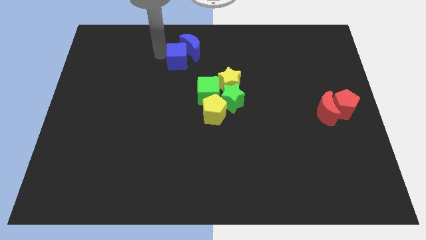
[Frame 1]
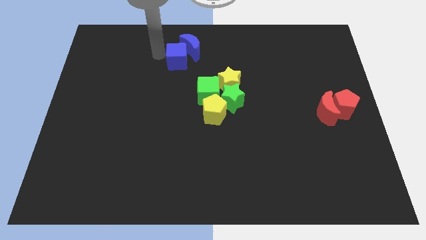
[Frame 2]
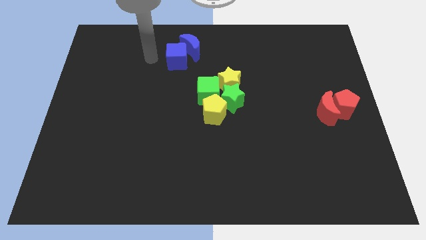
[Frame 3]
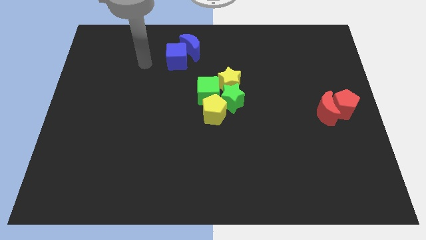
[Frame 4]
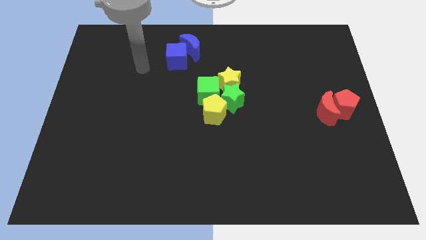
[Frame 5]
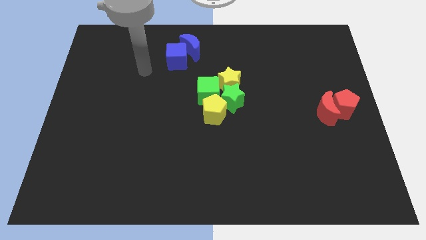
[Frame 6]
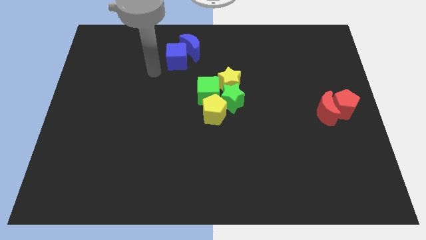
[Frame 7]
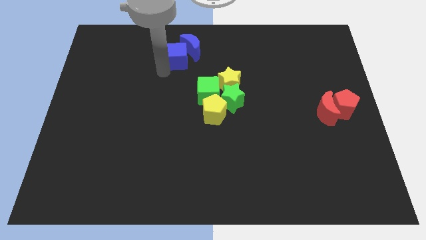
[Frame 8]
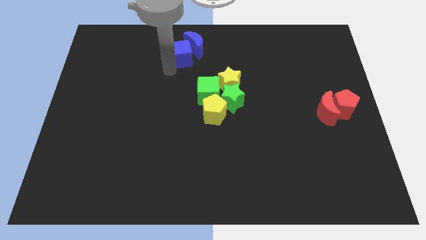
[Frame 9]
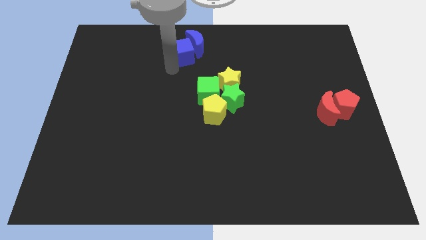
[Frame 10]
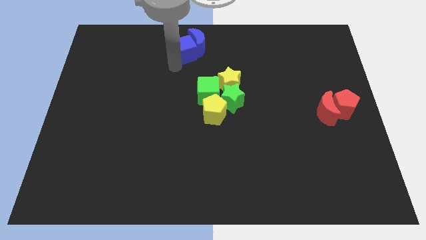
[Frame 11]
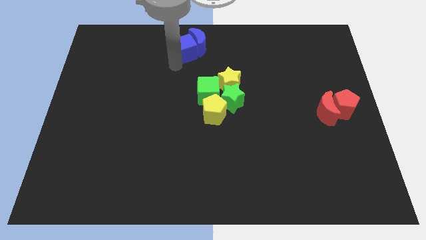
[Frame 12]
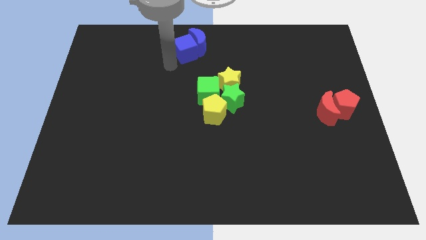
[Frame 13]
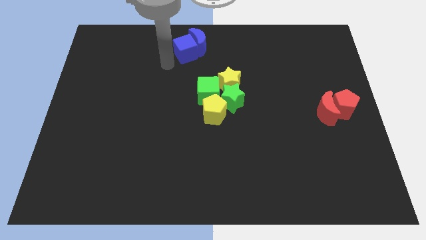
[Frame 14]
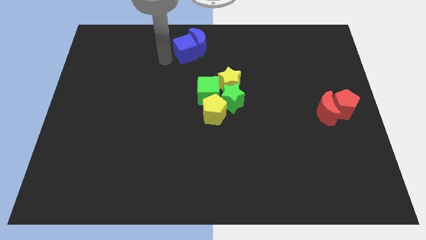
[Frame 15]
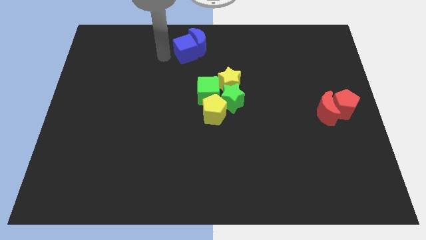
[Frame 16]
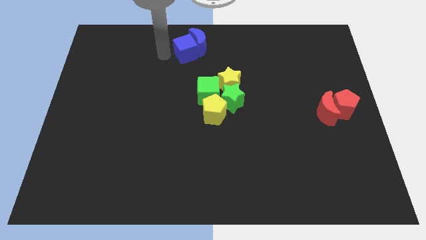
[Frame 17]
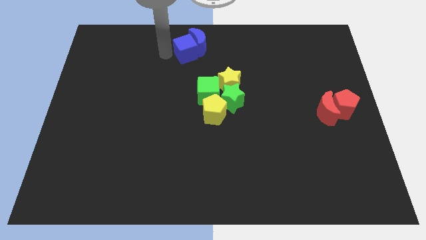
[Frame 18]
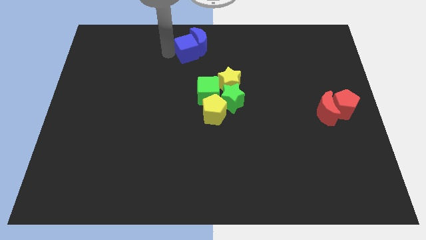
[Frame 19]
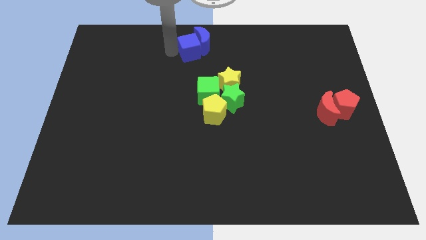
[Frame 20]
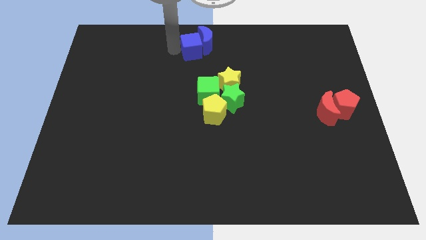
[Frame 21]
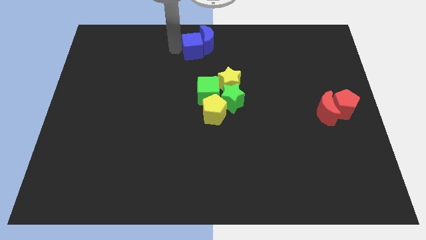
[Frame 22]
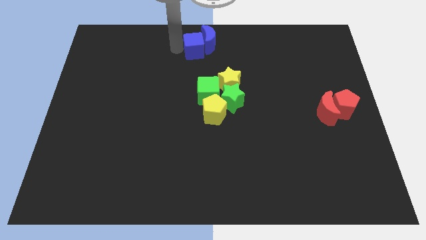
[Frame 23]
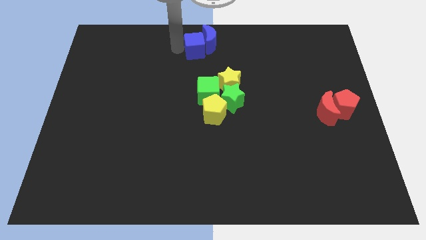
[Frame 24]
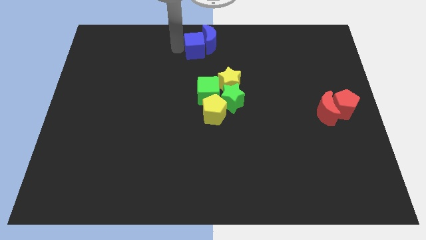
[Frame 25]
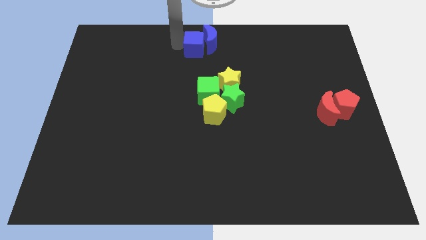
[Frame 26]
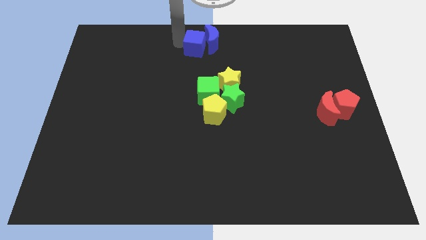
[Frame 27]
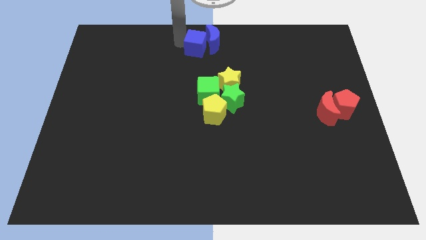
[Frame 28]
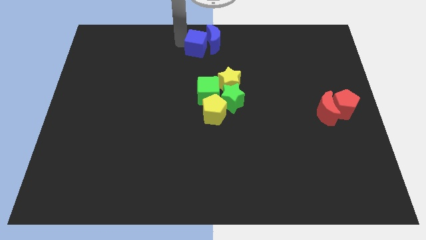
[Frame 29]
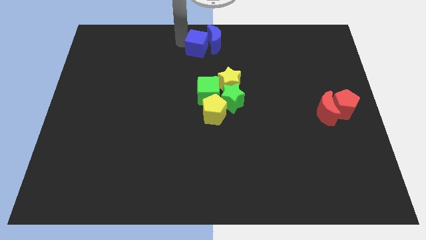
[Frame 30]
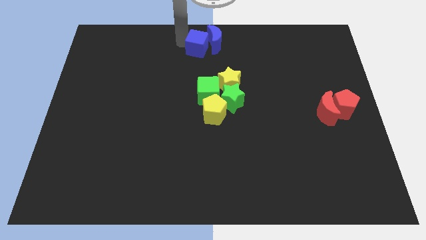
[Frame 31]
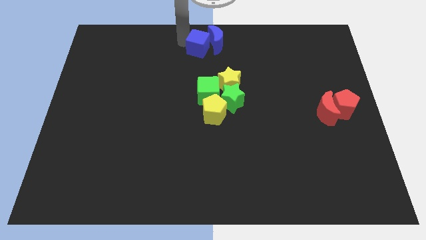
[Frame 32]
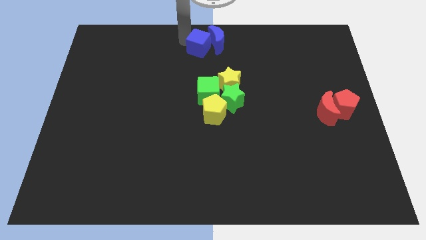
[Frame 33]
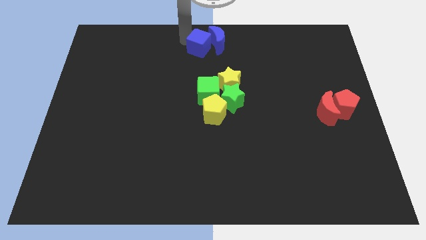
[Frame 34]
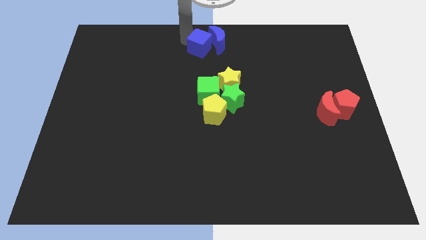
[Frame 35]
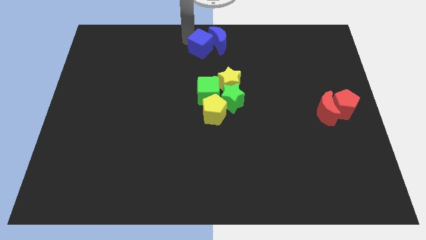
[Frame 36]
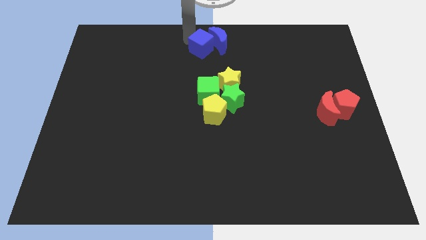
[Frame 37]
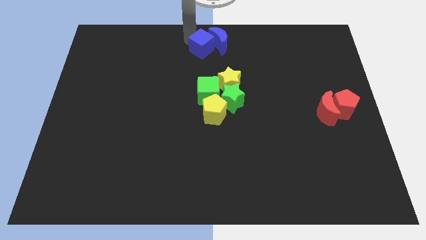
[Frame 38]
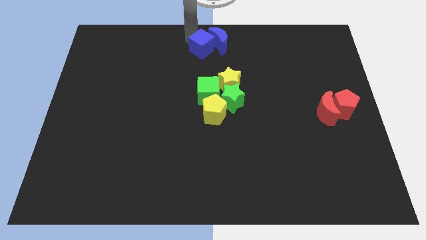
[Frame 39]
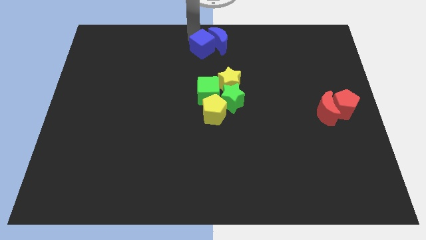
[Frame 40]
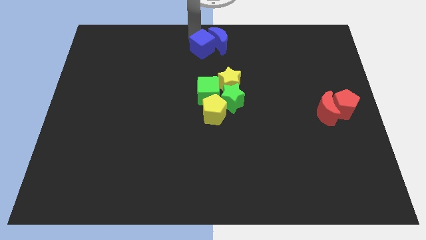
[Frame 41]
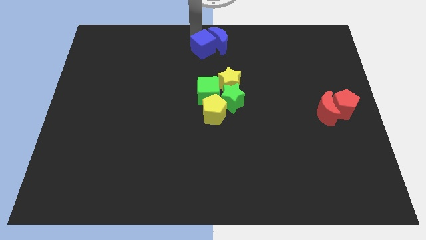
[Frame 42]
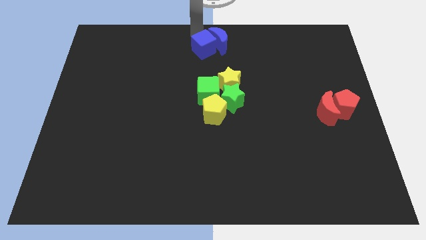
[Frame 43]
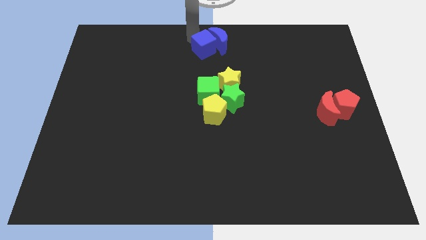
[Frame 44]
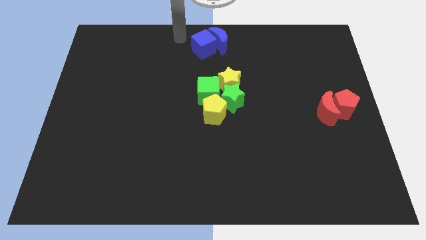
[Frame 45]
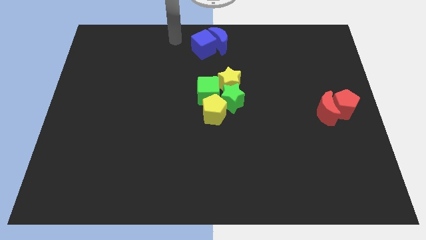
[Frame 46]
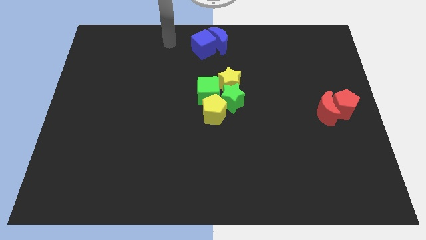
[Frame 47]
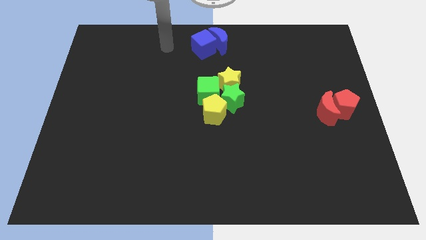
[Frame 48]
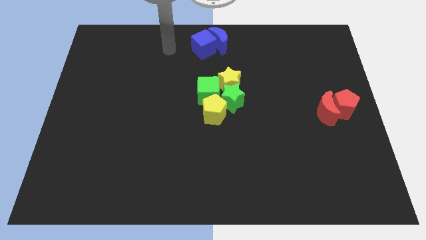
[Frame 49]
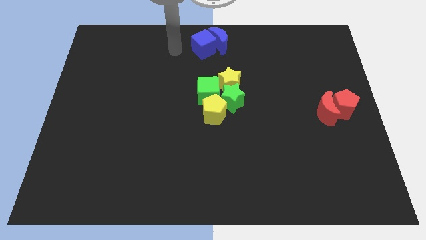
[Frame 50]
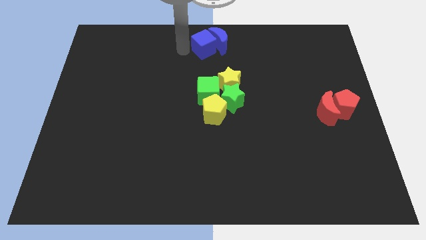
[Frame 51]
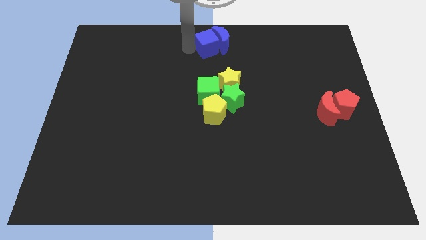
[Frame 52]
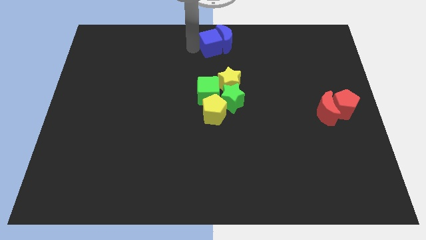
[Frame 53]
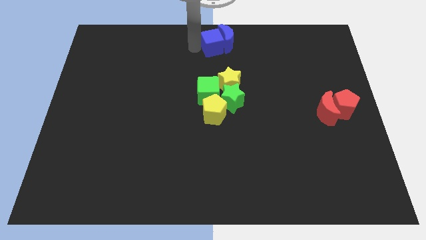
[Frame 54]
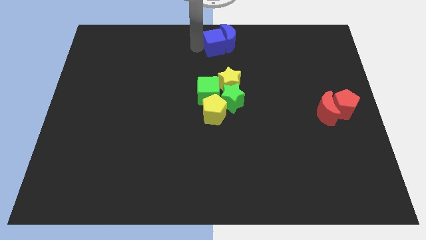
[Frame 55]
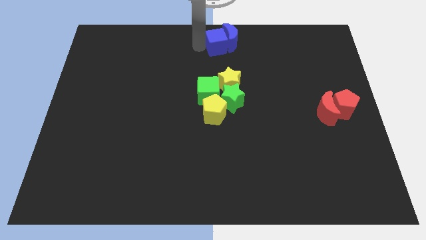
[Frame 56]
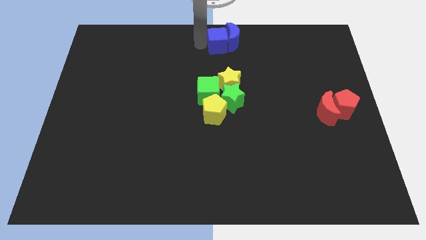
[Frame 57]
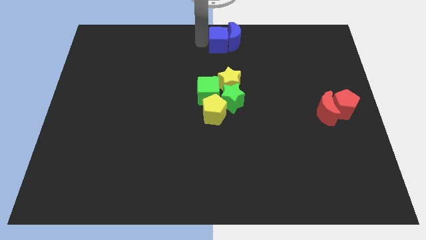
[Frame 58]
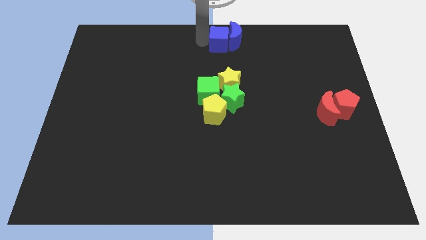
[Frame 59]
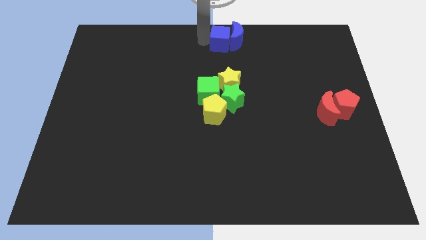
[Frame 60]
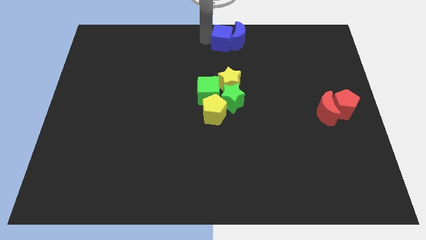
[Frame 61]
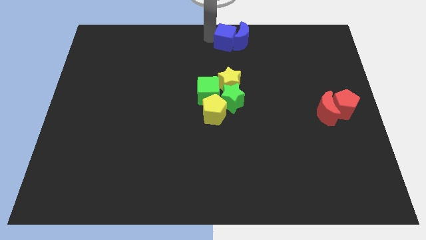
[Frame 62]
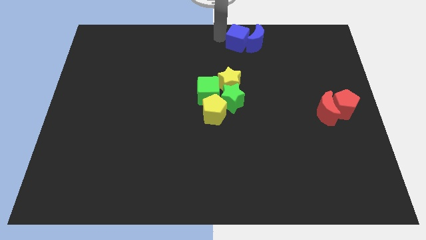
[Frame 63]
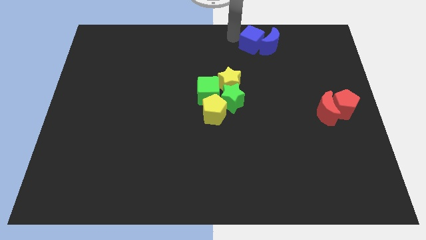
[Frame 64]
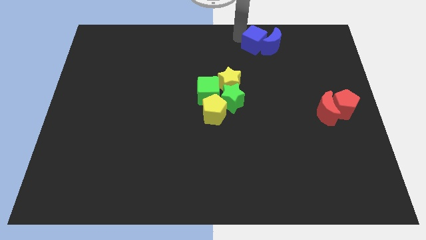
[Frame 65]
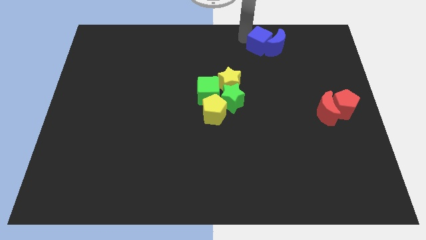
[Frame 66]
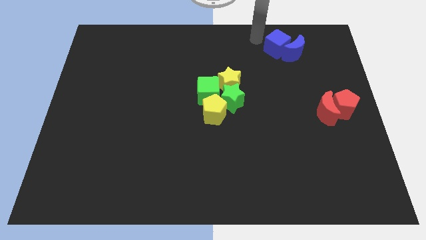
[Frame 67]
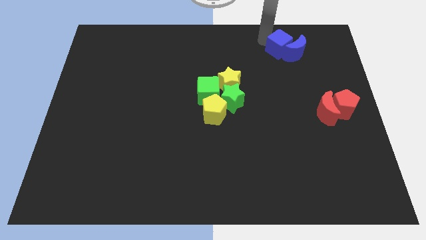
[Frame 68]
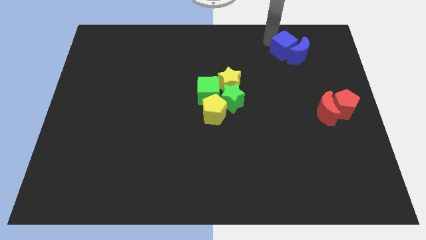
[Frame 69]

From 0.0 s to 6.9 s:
push the blue blocks together slightly to the right

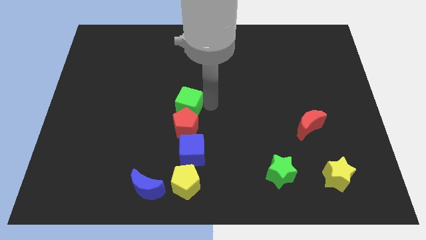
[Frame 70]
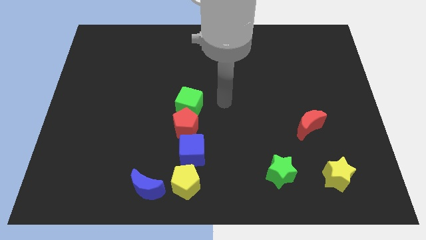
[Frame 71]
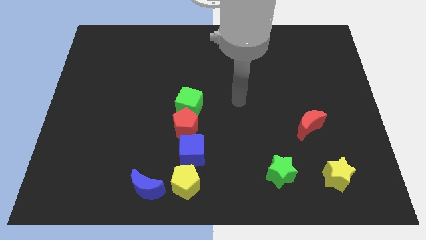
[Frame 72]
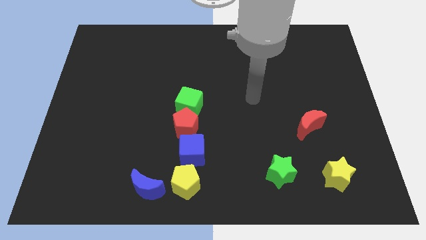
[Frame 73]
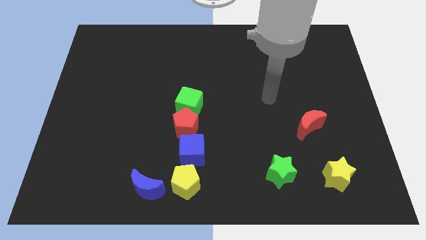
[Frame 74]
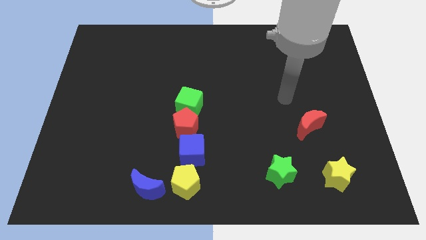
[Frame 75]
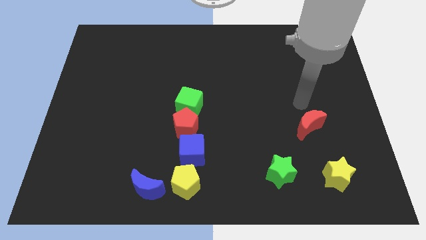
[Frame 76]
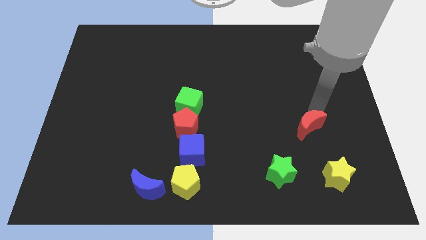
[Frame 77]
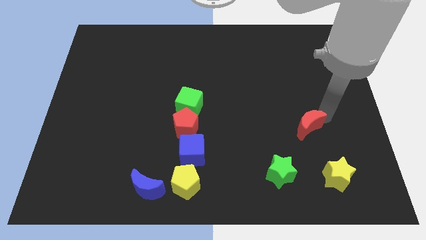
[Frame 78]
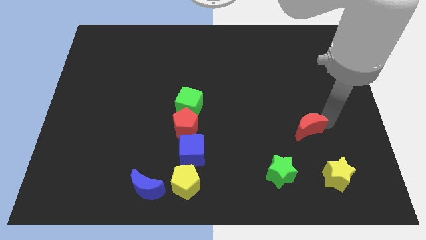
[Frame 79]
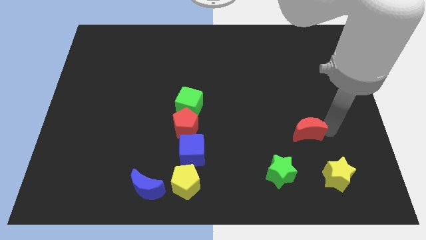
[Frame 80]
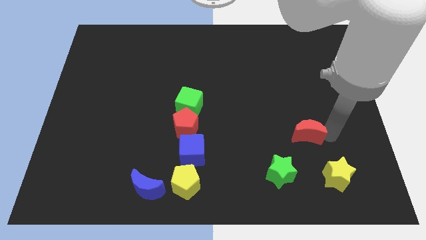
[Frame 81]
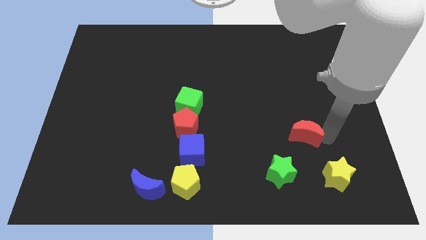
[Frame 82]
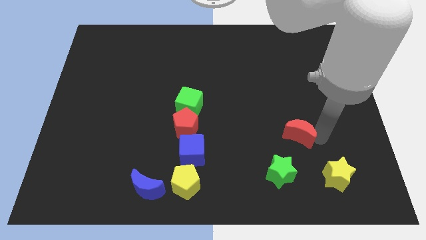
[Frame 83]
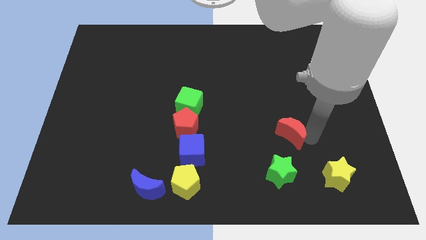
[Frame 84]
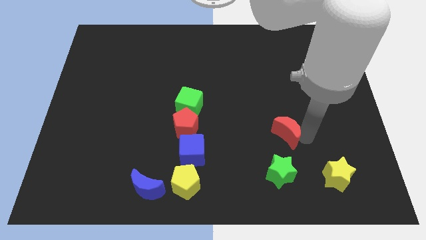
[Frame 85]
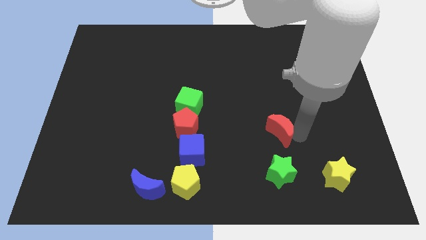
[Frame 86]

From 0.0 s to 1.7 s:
move red crescent to the top side of the green star

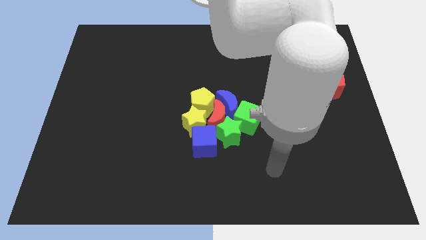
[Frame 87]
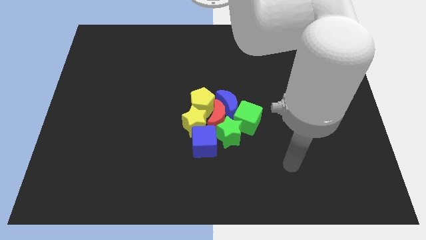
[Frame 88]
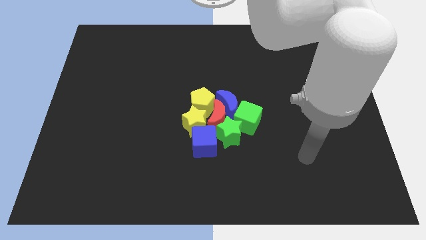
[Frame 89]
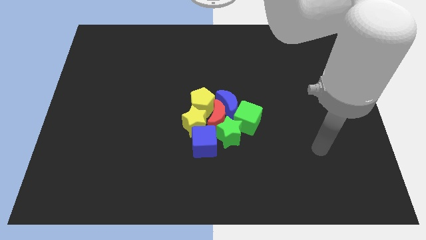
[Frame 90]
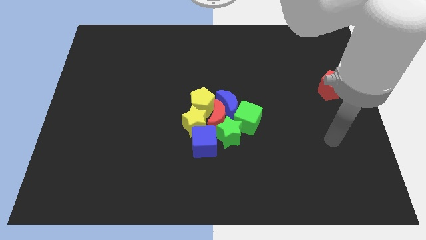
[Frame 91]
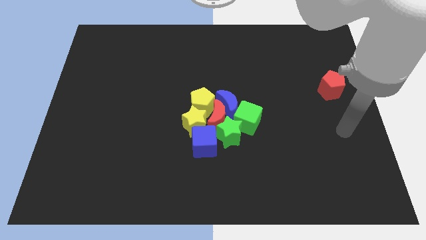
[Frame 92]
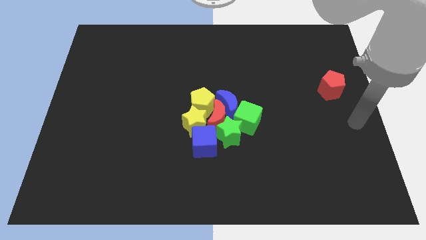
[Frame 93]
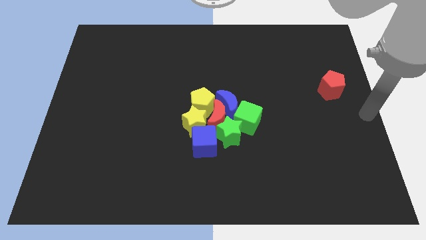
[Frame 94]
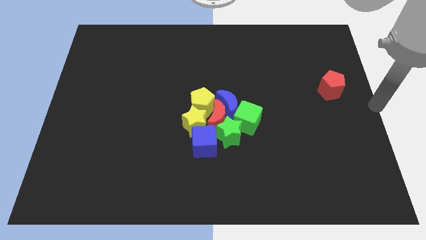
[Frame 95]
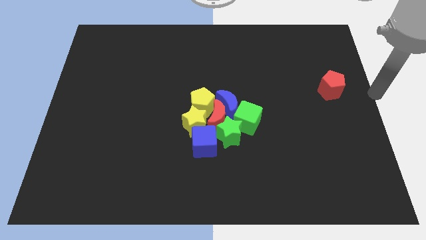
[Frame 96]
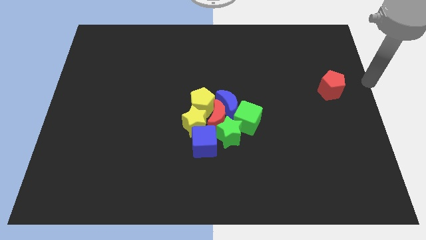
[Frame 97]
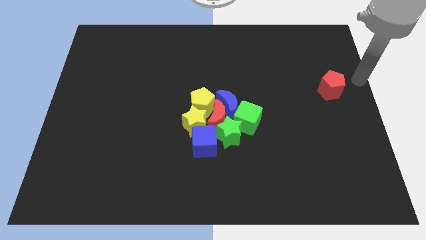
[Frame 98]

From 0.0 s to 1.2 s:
put your arm at the center right corner of the board
